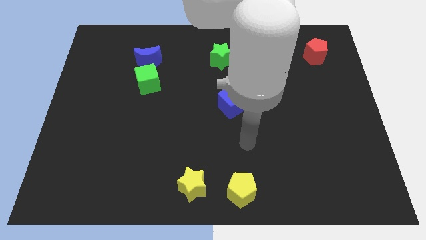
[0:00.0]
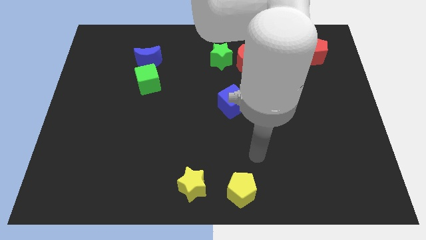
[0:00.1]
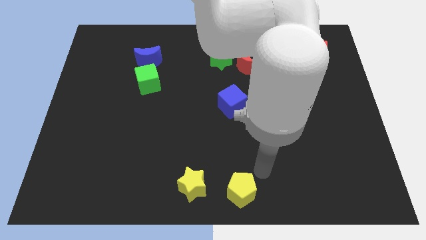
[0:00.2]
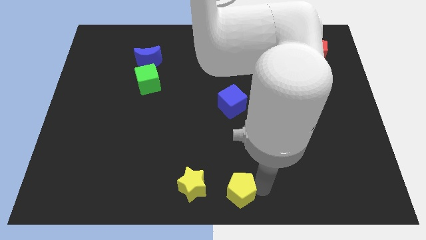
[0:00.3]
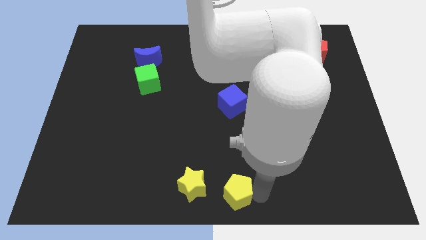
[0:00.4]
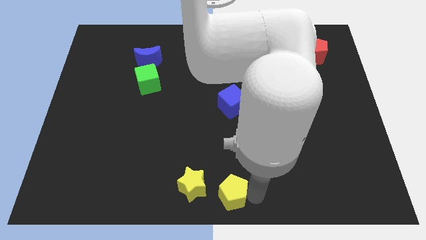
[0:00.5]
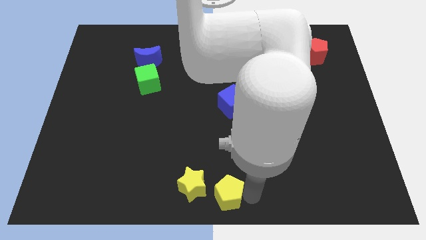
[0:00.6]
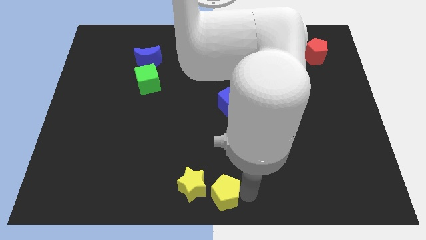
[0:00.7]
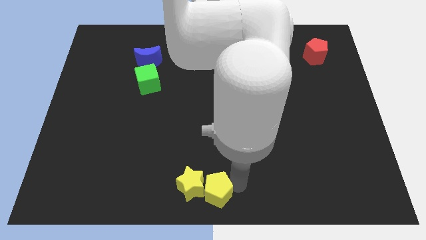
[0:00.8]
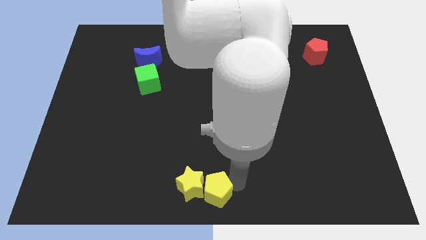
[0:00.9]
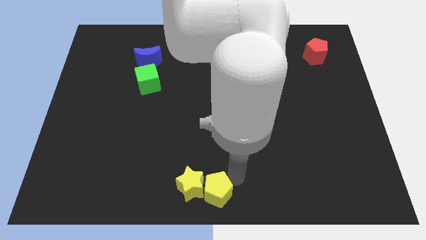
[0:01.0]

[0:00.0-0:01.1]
push yellow pentagon in to yellow star

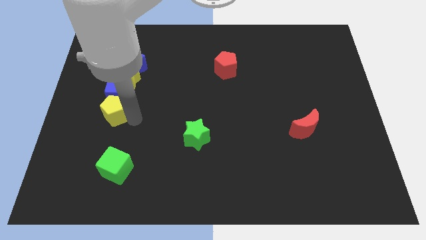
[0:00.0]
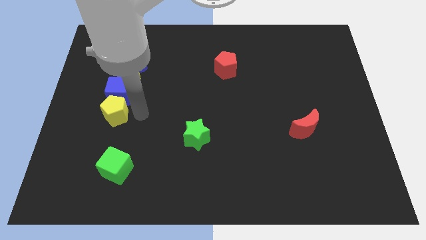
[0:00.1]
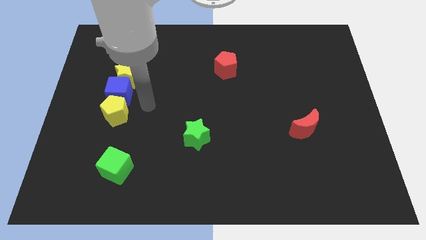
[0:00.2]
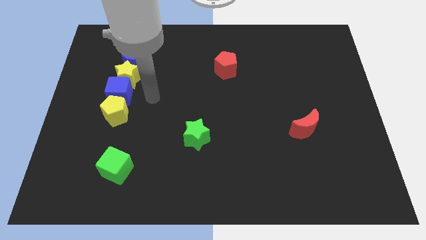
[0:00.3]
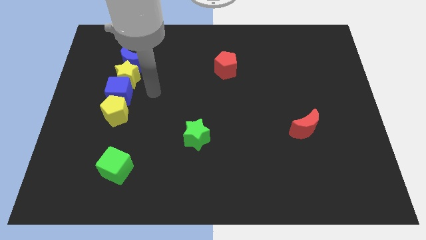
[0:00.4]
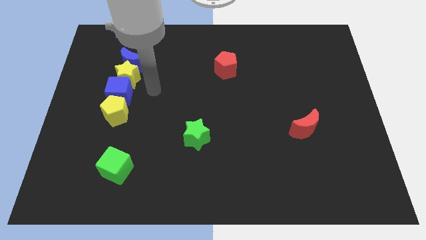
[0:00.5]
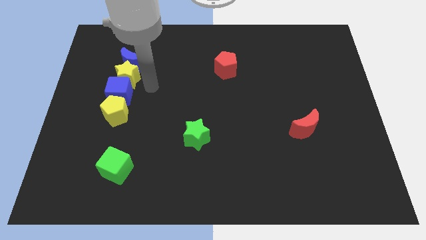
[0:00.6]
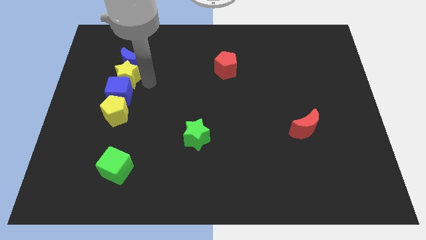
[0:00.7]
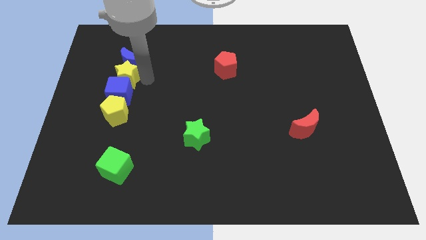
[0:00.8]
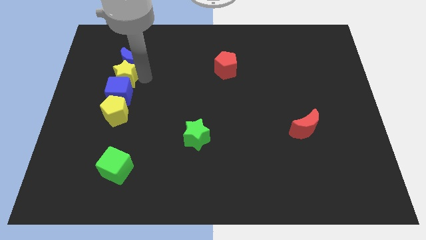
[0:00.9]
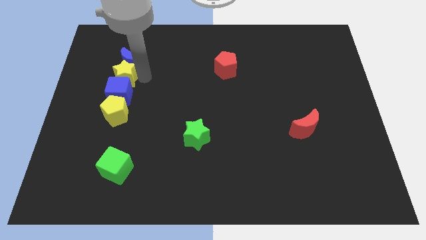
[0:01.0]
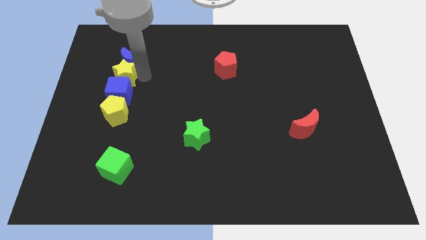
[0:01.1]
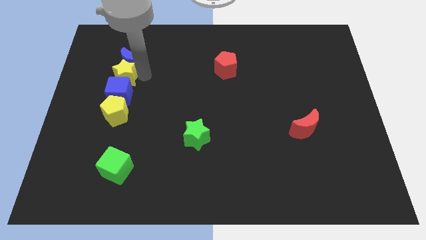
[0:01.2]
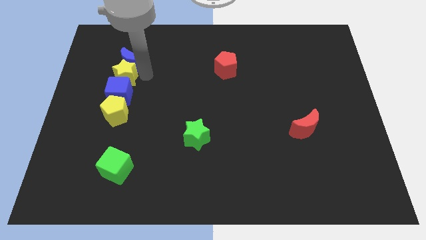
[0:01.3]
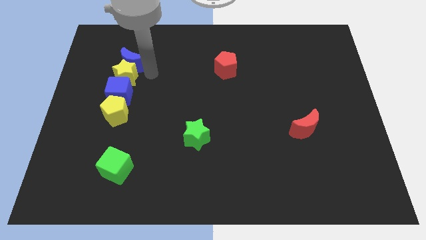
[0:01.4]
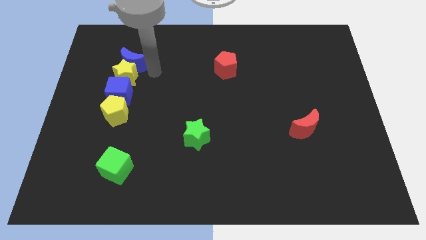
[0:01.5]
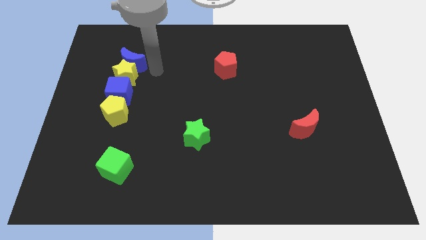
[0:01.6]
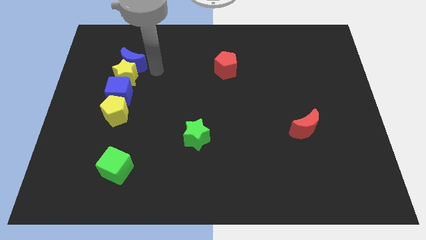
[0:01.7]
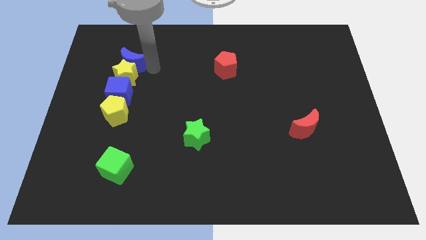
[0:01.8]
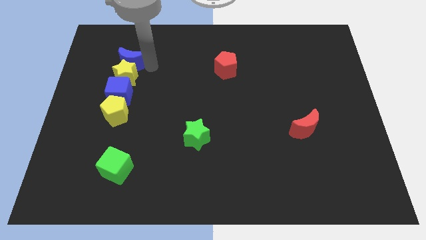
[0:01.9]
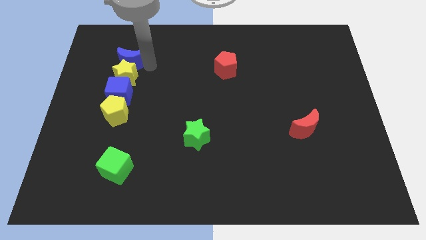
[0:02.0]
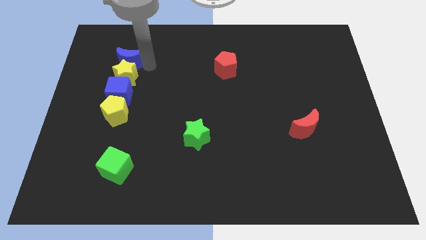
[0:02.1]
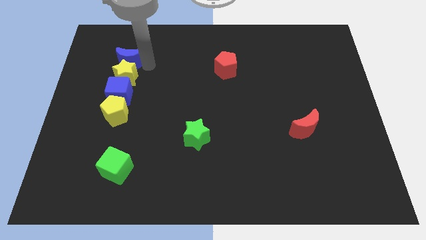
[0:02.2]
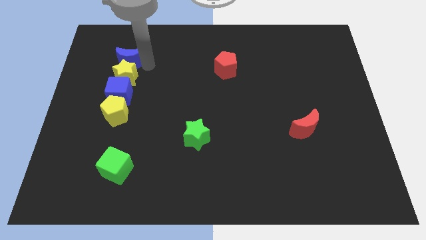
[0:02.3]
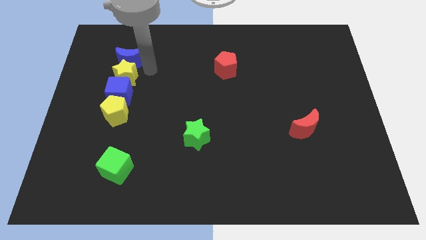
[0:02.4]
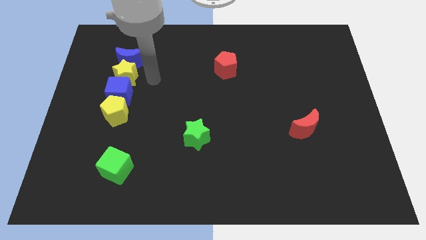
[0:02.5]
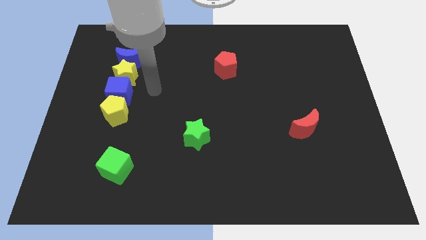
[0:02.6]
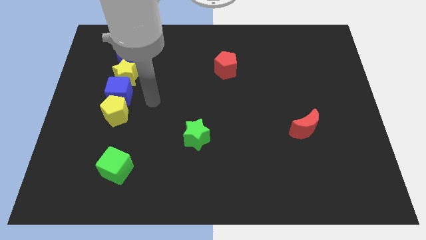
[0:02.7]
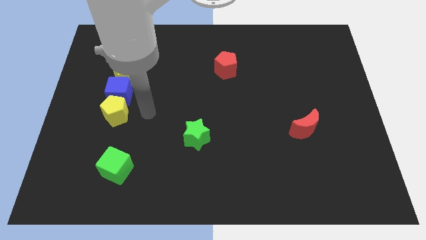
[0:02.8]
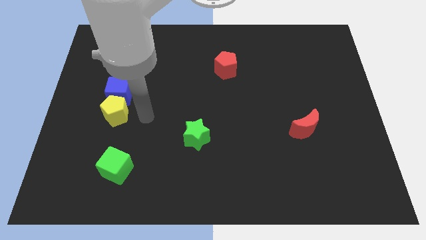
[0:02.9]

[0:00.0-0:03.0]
push the yellow and blue blocks slightly to the left to form a line

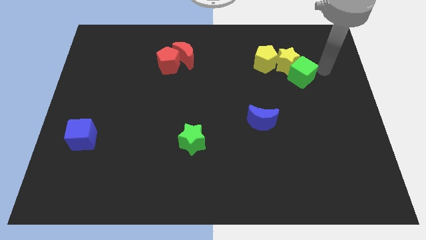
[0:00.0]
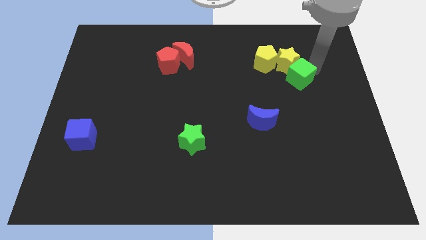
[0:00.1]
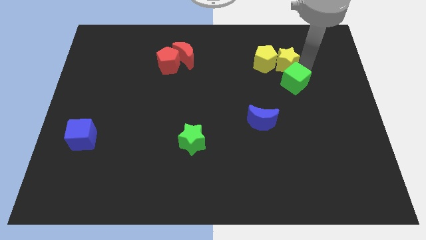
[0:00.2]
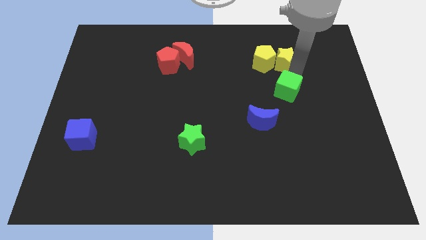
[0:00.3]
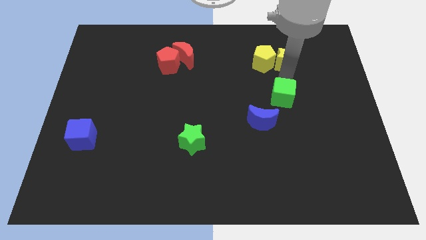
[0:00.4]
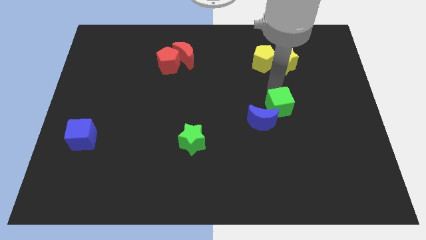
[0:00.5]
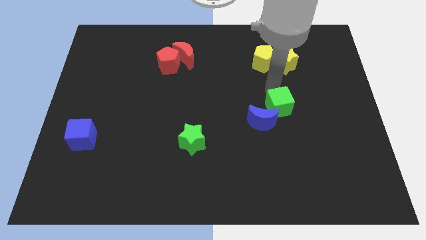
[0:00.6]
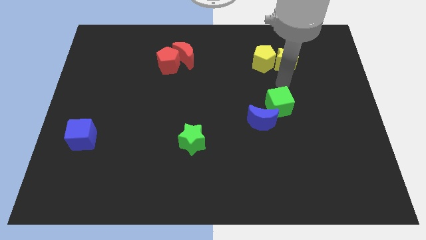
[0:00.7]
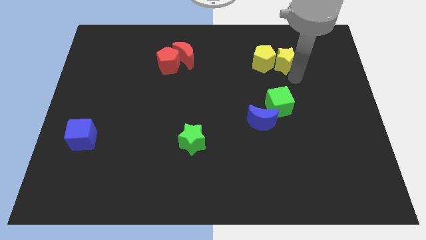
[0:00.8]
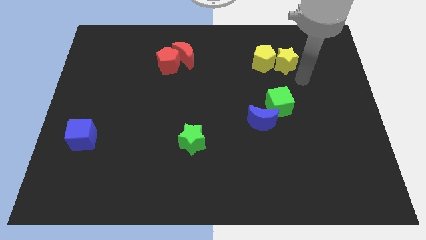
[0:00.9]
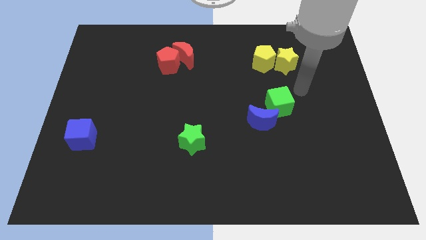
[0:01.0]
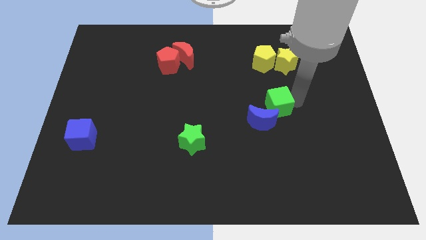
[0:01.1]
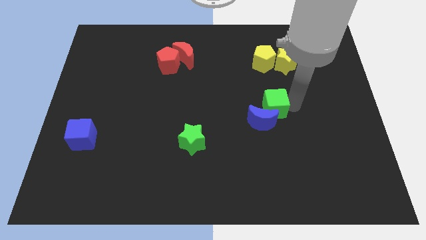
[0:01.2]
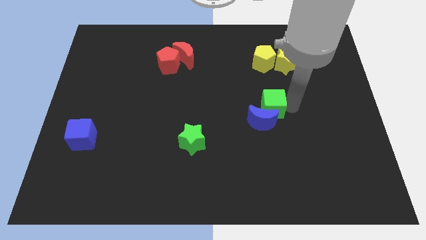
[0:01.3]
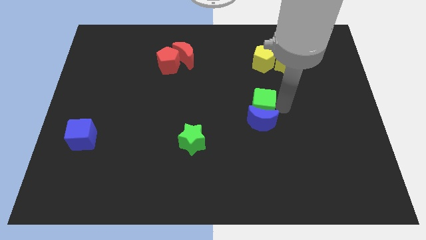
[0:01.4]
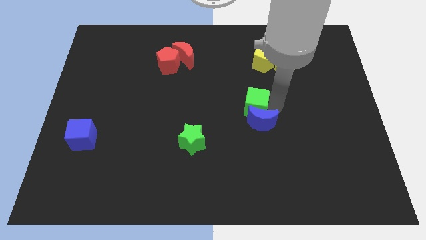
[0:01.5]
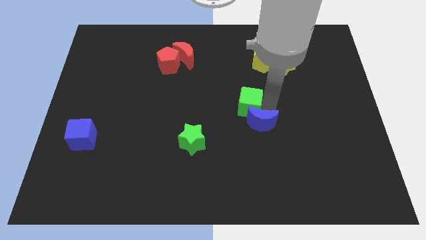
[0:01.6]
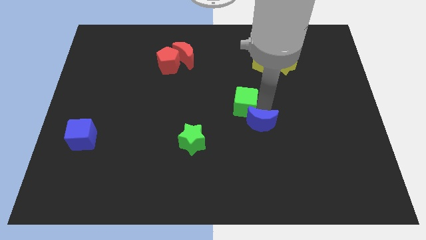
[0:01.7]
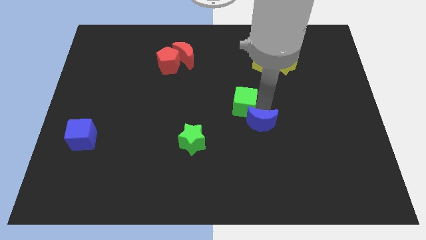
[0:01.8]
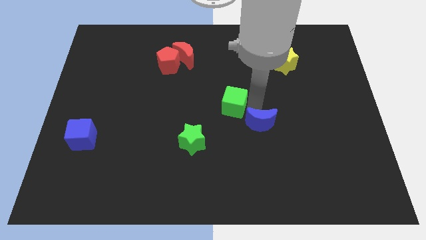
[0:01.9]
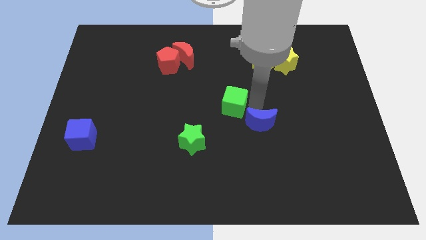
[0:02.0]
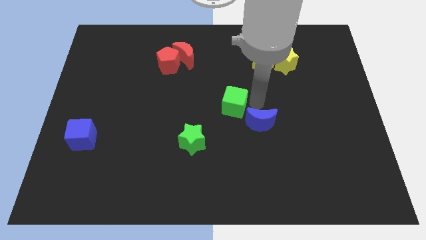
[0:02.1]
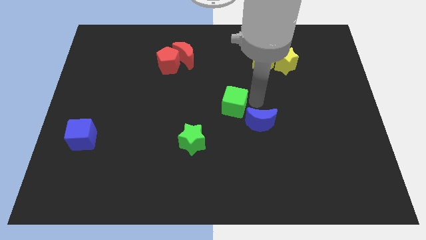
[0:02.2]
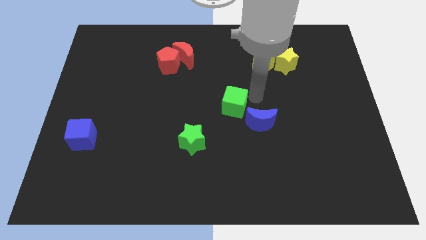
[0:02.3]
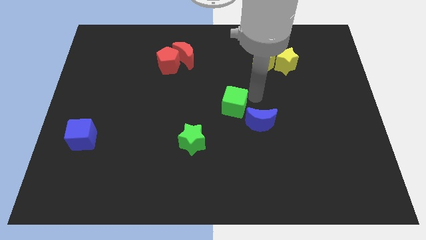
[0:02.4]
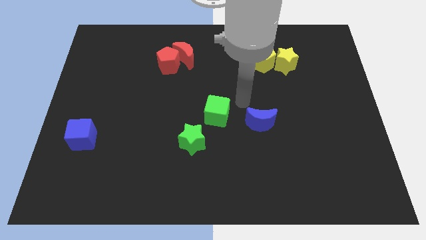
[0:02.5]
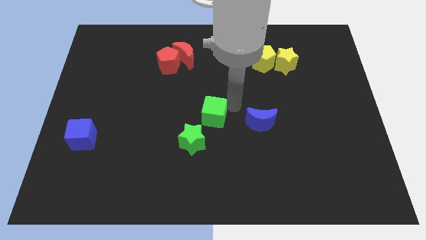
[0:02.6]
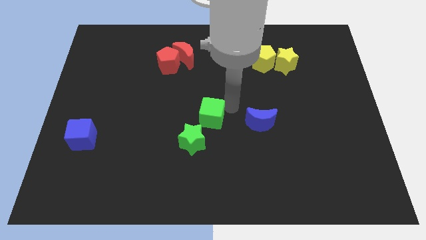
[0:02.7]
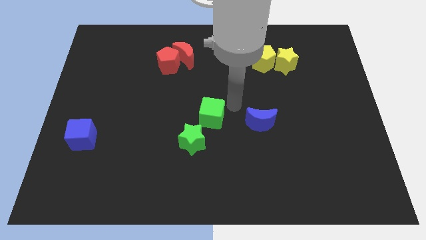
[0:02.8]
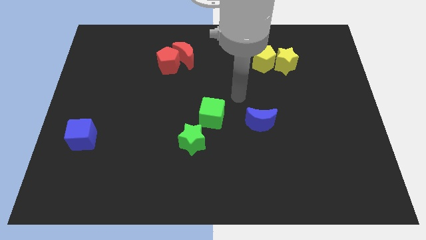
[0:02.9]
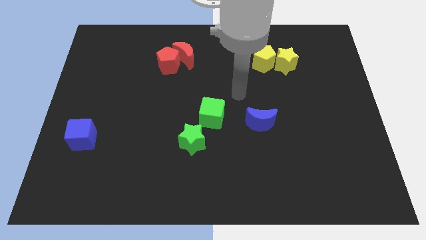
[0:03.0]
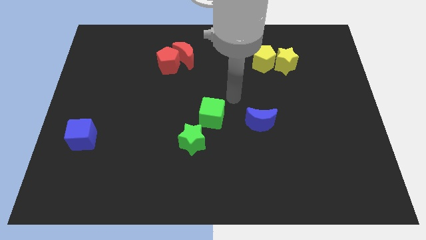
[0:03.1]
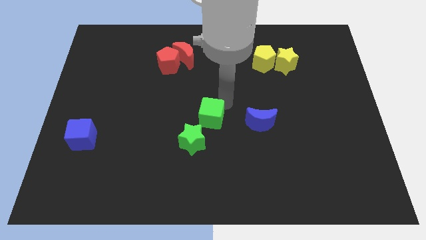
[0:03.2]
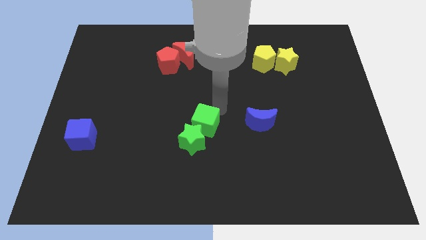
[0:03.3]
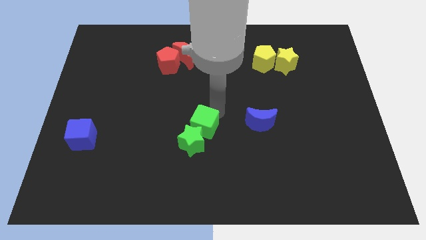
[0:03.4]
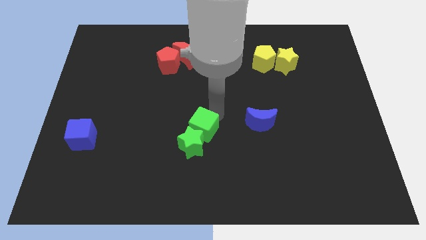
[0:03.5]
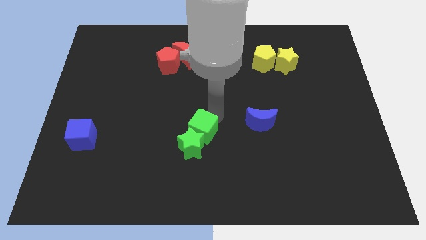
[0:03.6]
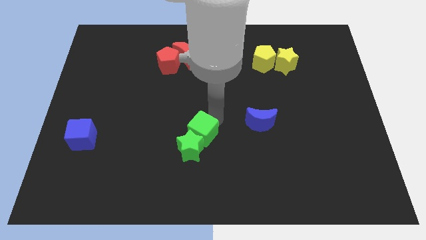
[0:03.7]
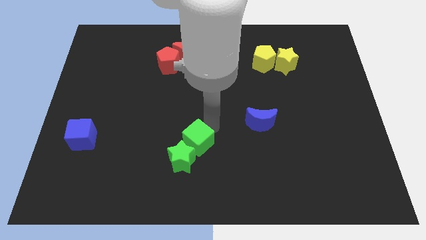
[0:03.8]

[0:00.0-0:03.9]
push the green cube into the green star

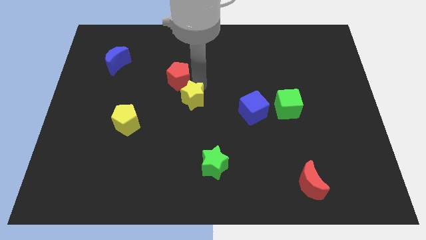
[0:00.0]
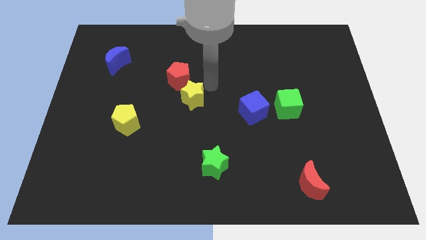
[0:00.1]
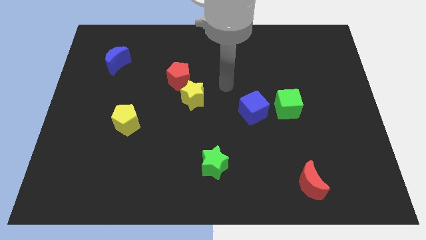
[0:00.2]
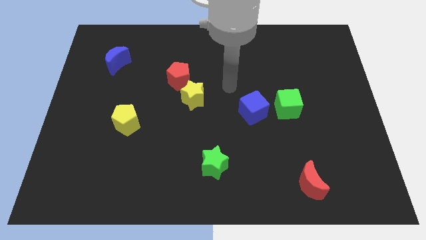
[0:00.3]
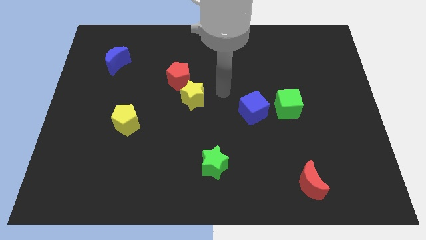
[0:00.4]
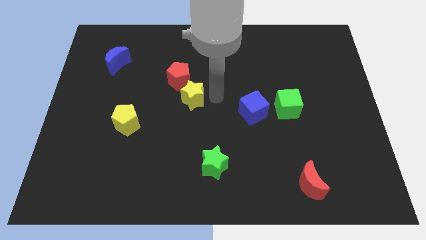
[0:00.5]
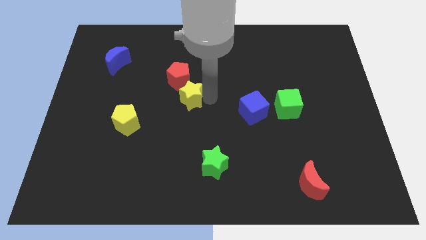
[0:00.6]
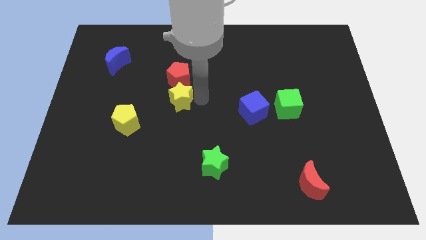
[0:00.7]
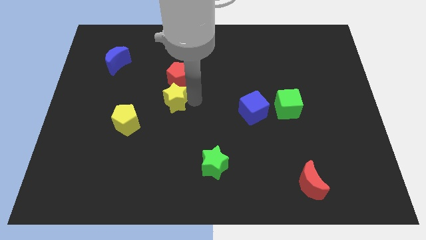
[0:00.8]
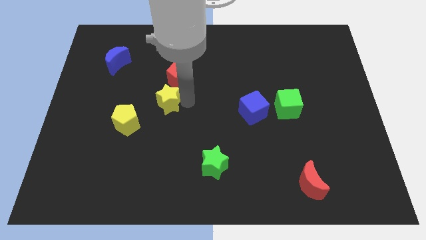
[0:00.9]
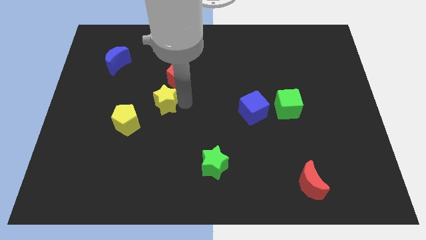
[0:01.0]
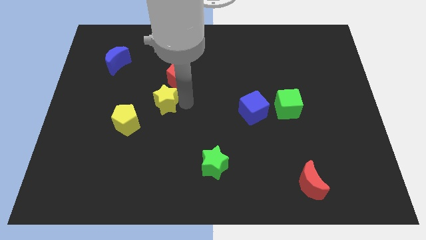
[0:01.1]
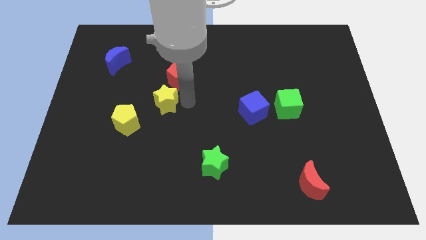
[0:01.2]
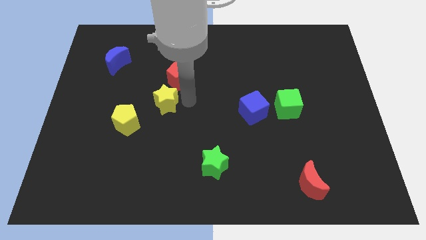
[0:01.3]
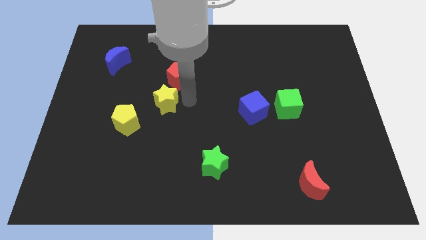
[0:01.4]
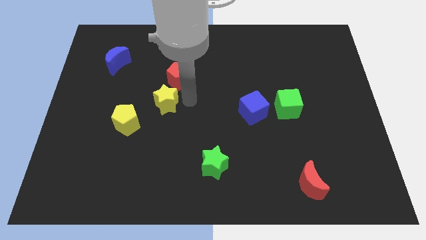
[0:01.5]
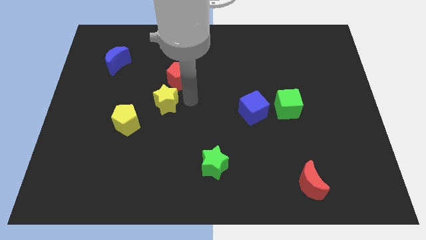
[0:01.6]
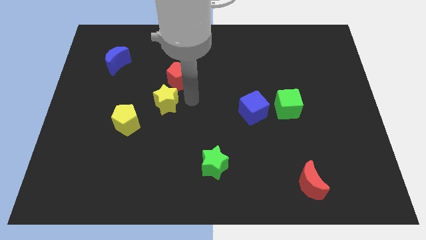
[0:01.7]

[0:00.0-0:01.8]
place the yellow star in between the red pentagon and yellow pentagon
